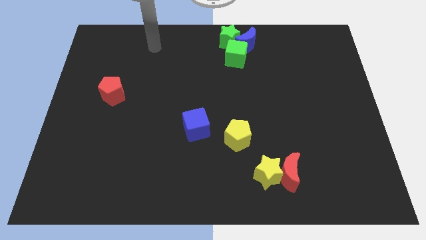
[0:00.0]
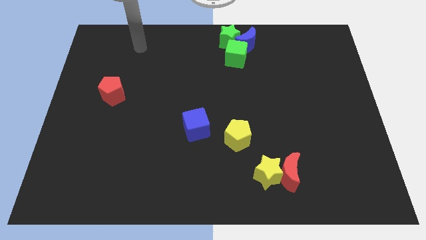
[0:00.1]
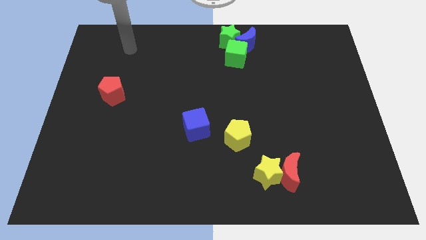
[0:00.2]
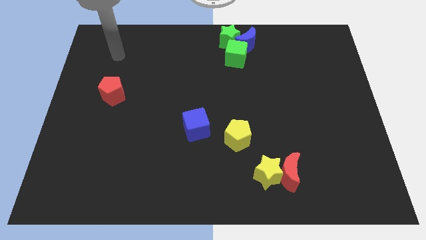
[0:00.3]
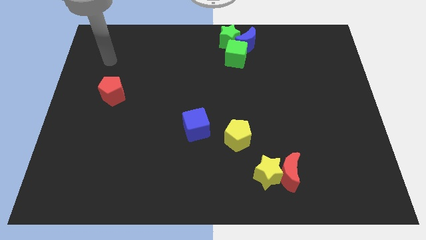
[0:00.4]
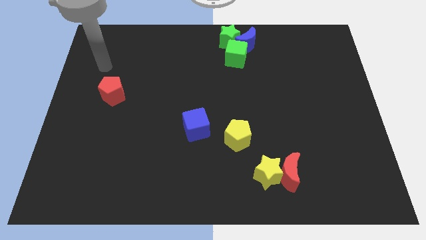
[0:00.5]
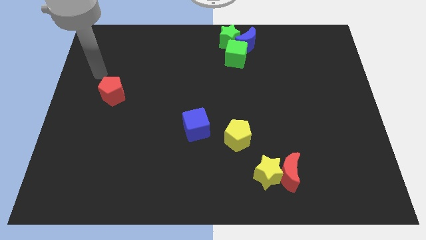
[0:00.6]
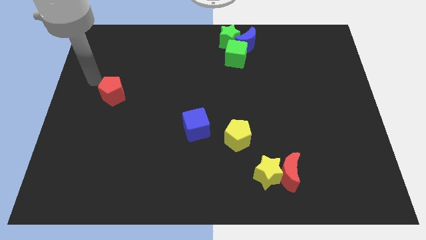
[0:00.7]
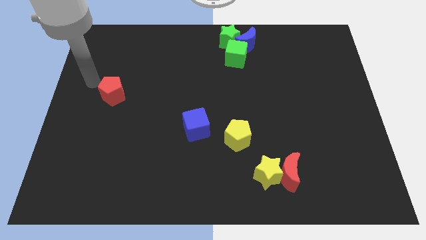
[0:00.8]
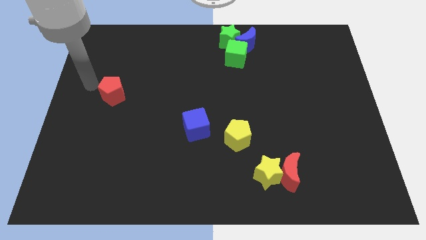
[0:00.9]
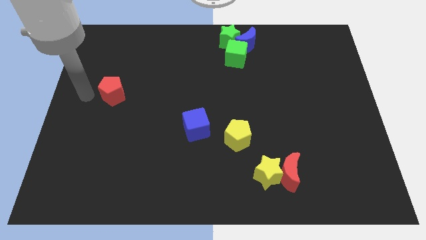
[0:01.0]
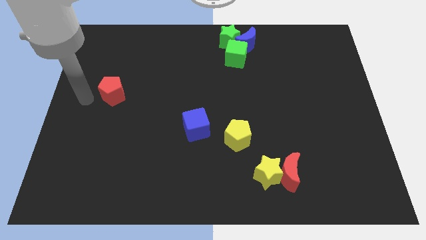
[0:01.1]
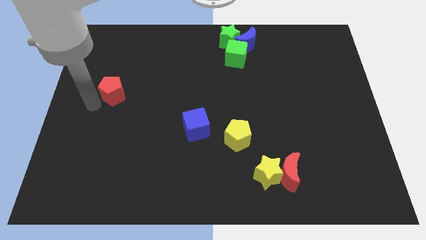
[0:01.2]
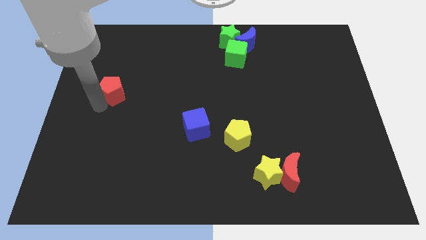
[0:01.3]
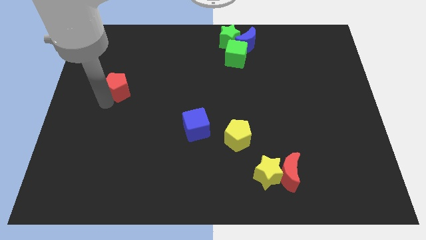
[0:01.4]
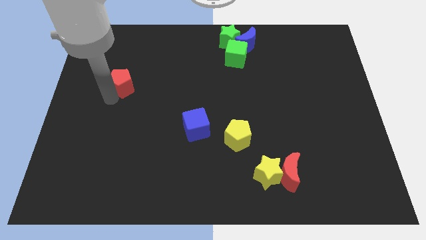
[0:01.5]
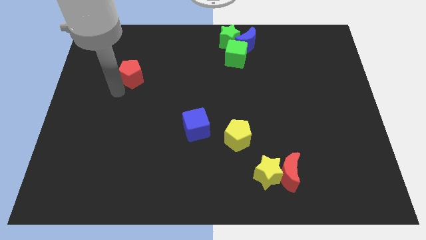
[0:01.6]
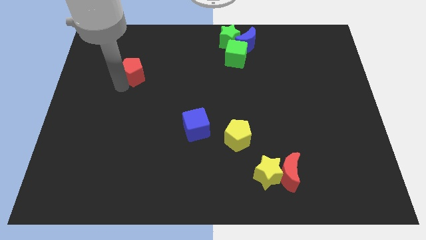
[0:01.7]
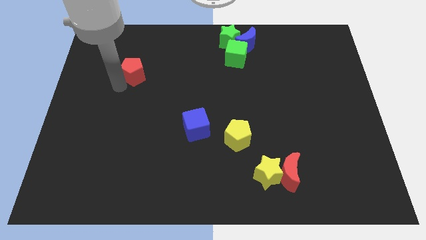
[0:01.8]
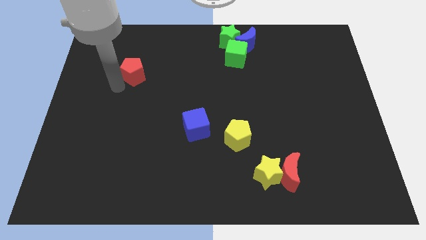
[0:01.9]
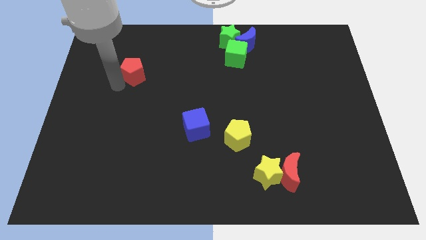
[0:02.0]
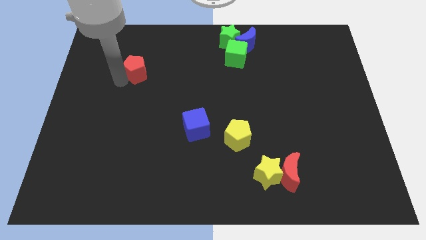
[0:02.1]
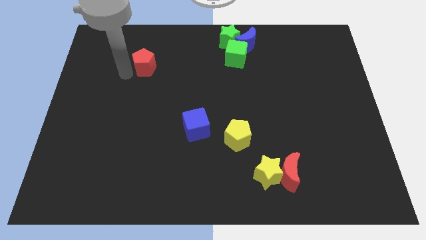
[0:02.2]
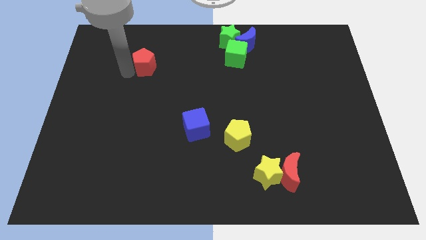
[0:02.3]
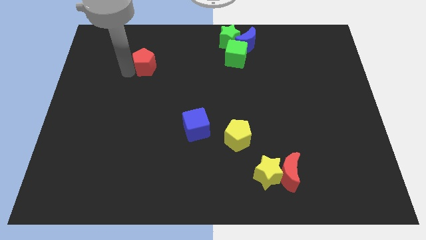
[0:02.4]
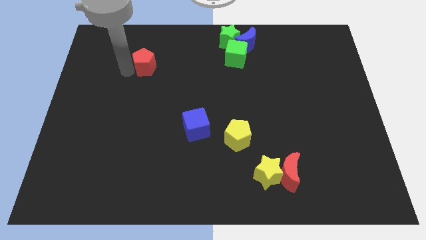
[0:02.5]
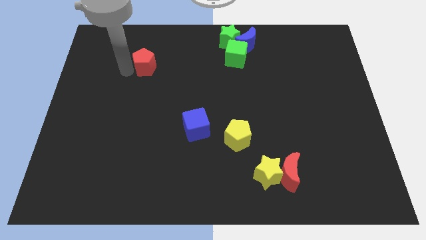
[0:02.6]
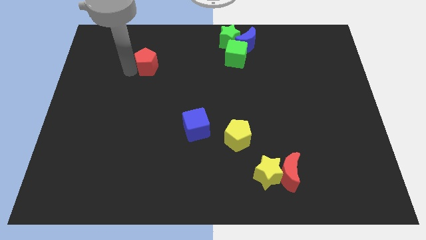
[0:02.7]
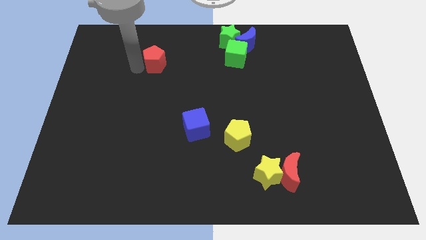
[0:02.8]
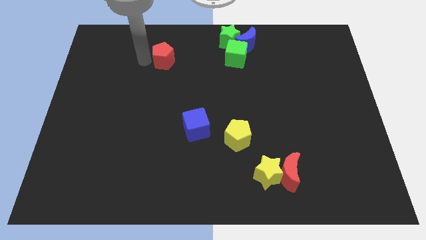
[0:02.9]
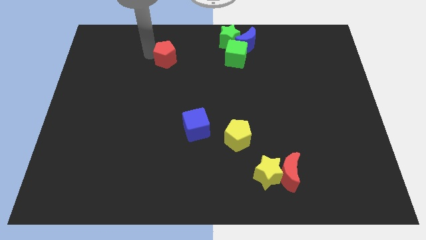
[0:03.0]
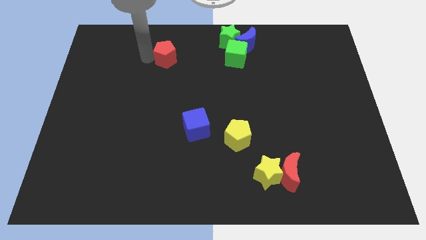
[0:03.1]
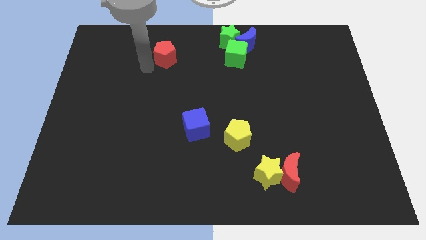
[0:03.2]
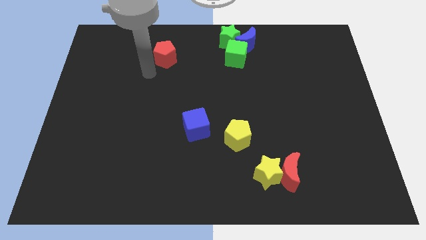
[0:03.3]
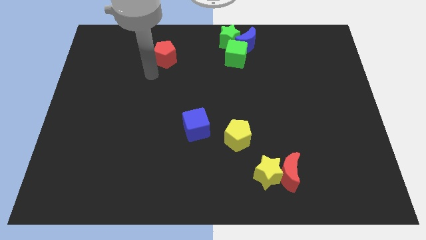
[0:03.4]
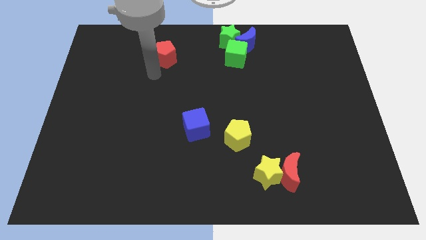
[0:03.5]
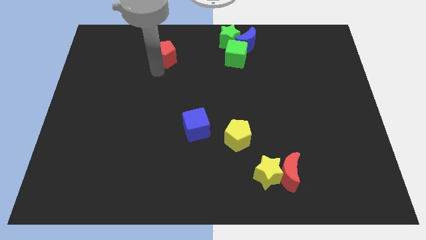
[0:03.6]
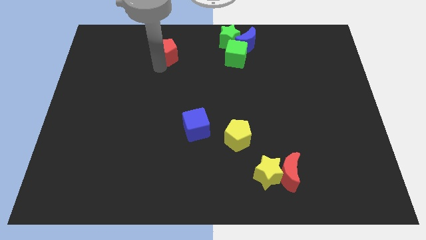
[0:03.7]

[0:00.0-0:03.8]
push the red pentagon horizontally to the left side of the green cube

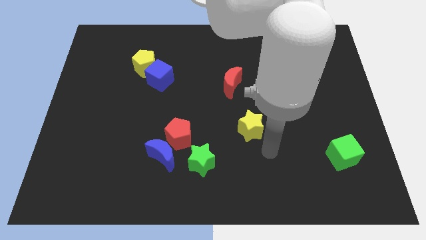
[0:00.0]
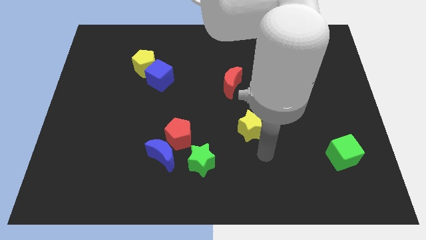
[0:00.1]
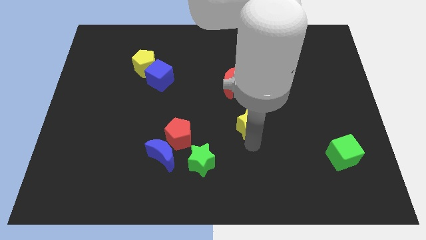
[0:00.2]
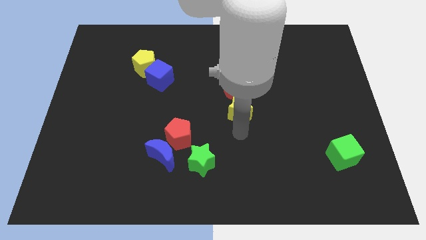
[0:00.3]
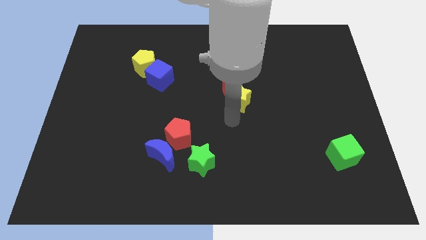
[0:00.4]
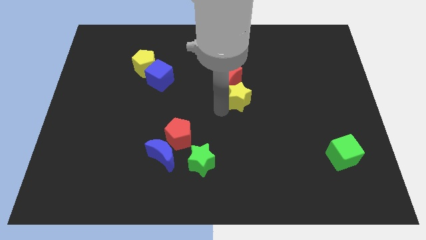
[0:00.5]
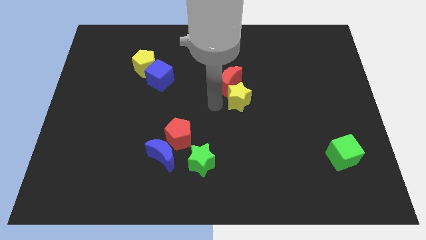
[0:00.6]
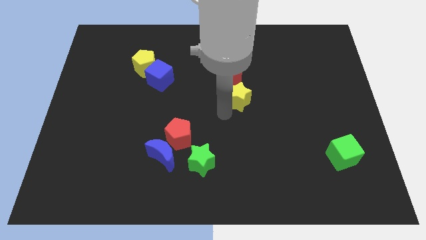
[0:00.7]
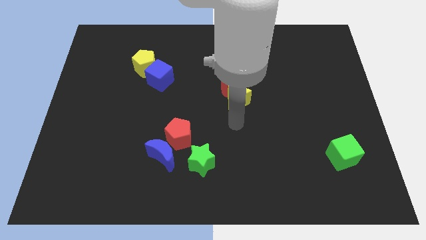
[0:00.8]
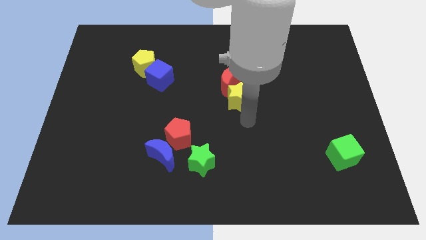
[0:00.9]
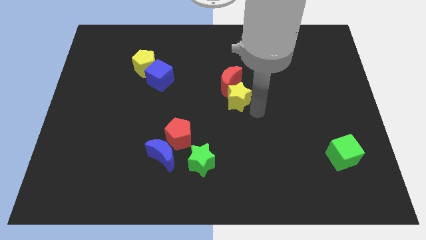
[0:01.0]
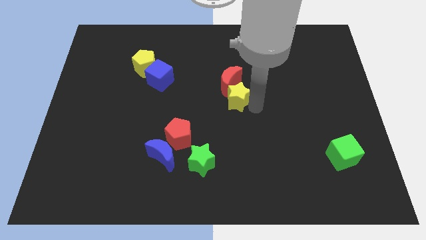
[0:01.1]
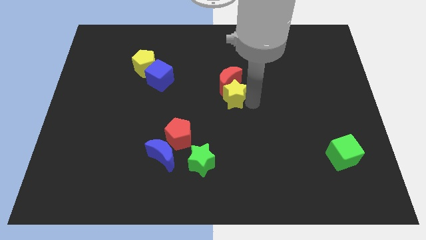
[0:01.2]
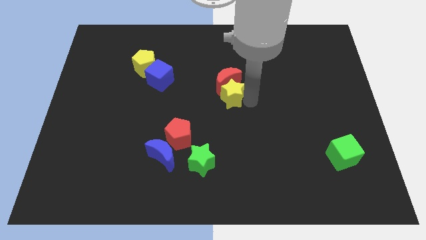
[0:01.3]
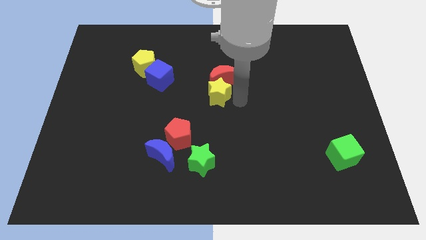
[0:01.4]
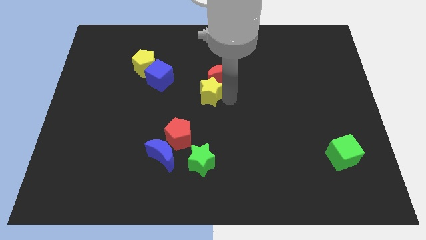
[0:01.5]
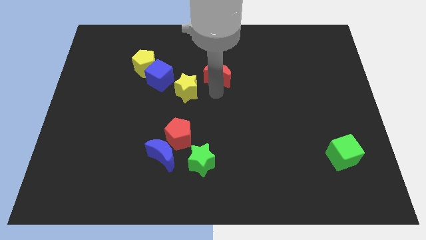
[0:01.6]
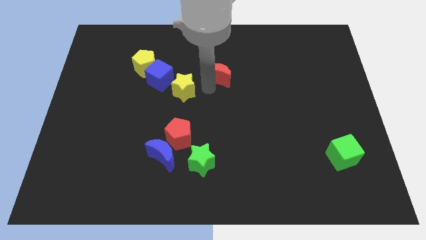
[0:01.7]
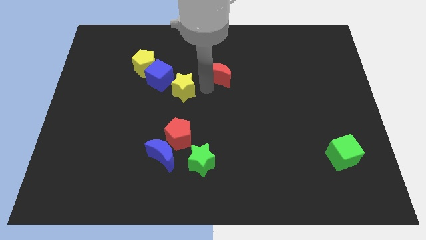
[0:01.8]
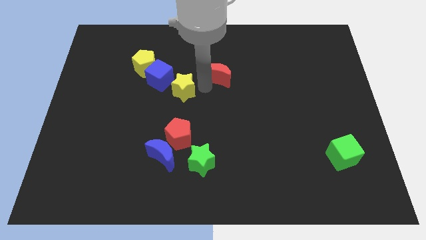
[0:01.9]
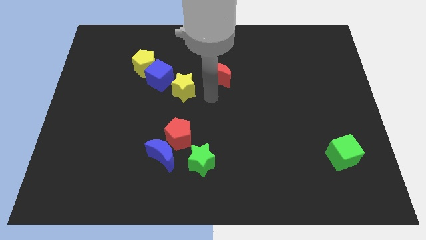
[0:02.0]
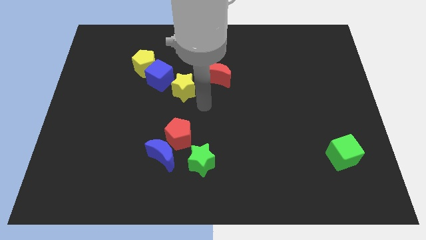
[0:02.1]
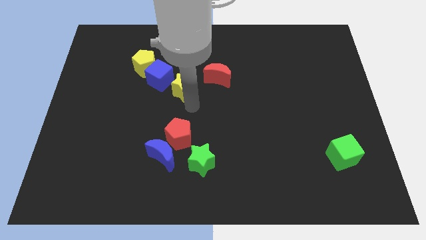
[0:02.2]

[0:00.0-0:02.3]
push yellow star towards blue cube

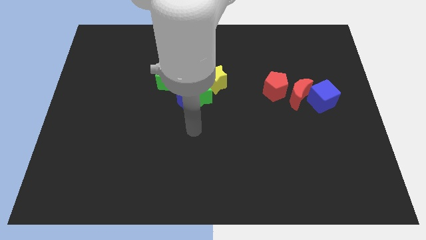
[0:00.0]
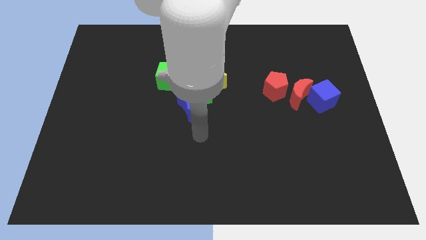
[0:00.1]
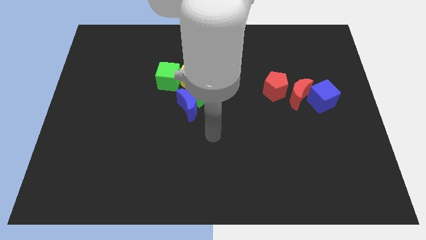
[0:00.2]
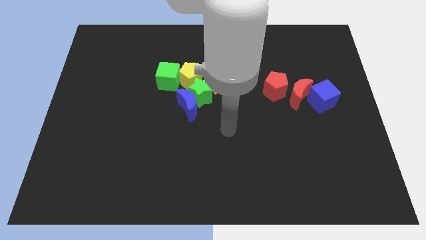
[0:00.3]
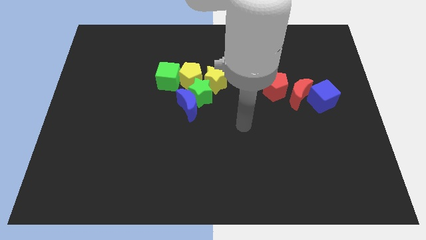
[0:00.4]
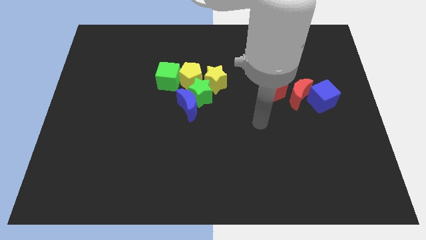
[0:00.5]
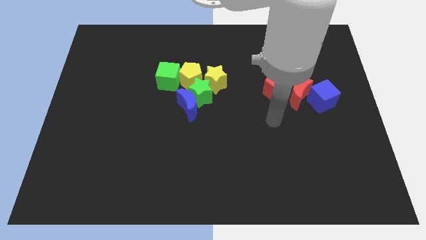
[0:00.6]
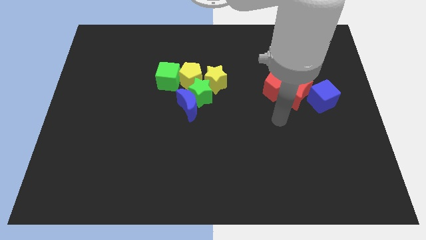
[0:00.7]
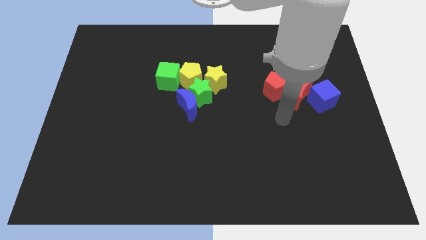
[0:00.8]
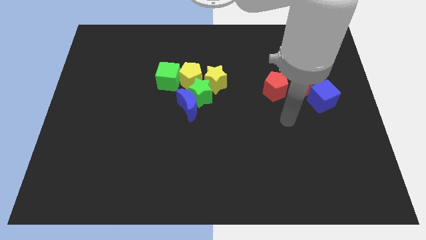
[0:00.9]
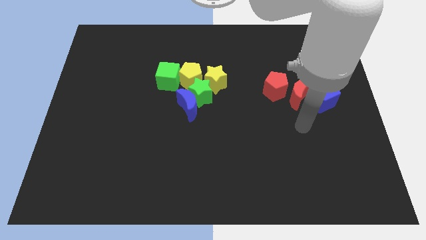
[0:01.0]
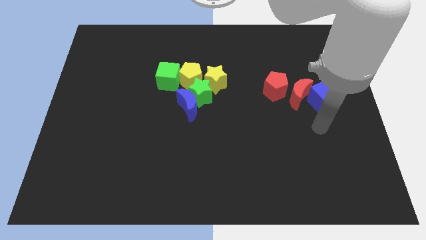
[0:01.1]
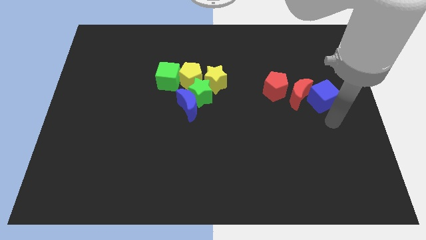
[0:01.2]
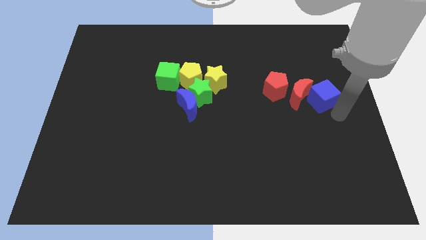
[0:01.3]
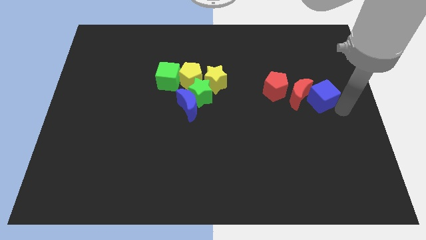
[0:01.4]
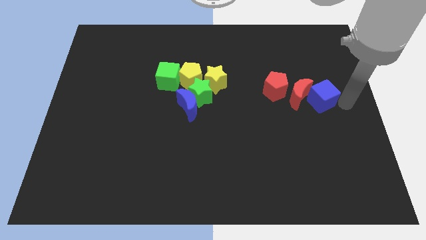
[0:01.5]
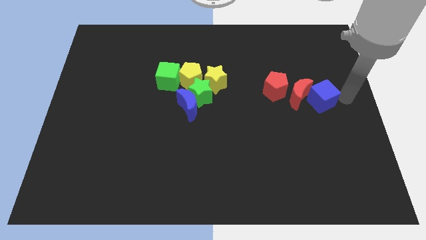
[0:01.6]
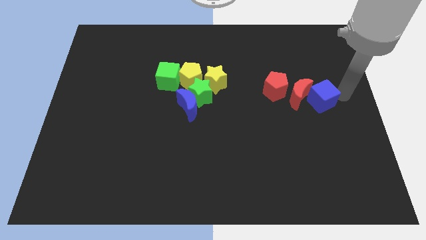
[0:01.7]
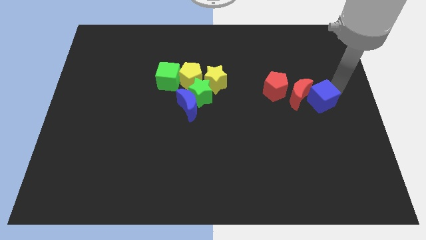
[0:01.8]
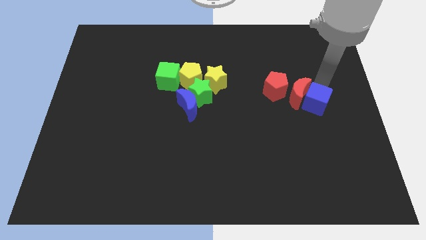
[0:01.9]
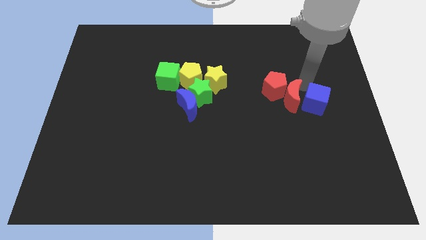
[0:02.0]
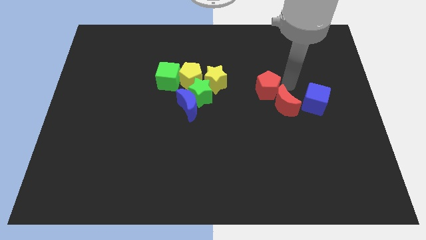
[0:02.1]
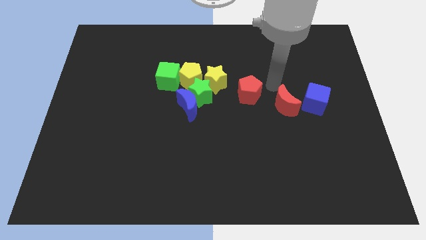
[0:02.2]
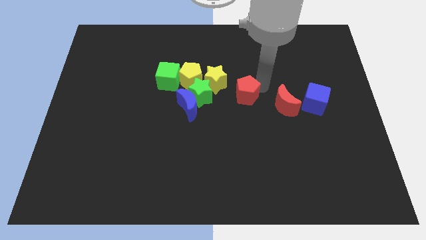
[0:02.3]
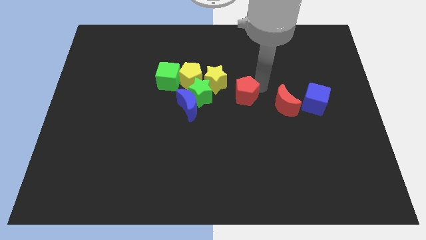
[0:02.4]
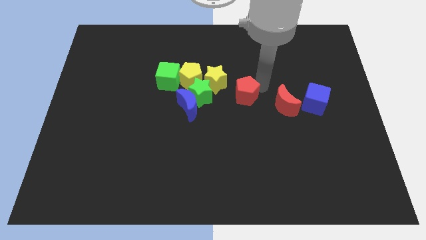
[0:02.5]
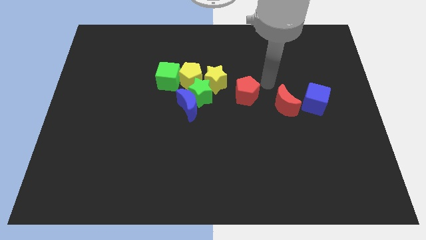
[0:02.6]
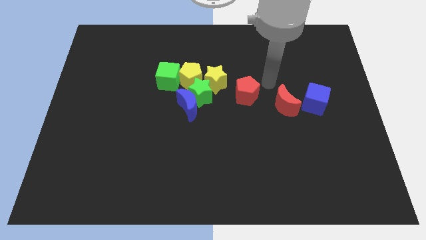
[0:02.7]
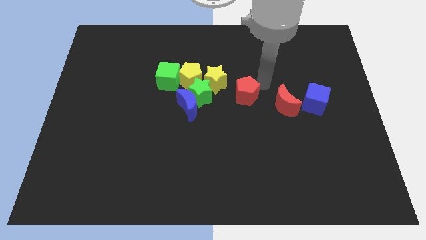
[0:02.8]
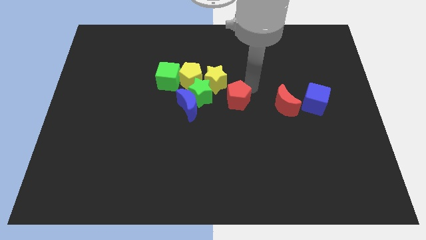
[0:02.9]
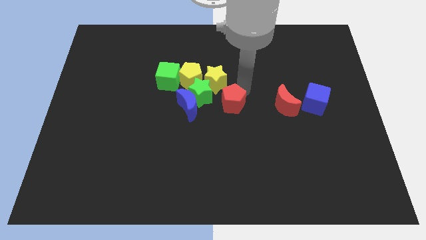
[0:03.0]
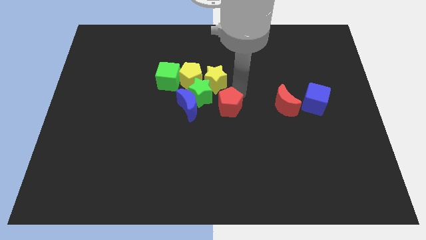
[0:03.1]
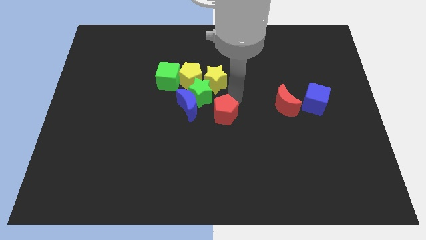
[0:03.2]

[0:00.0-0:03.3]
push the red pentagon to the right side of the blue crescent
